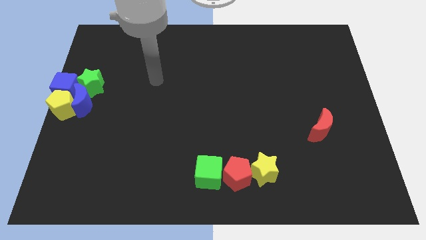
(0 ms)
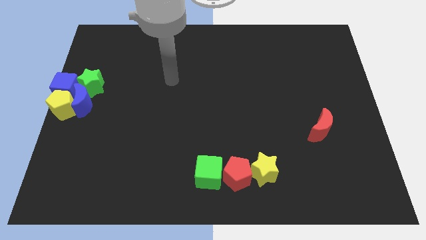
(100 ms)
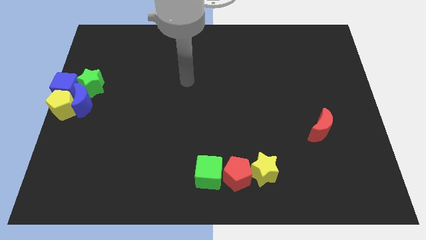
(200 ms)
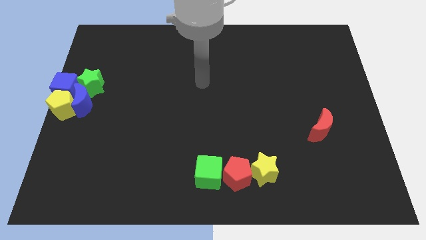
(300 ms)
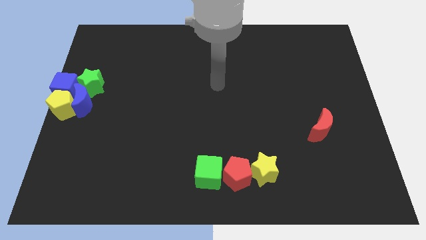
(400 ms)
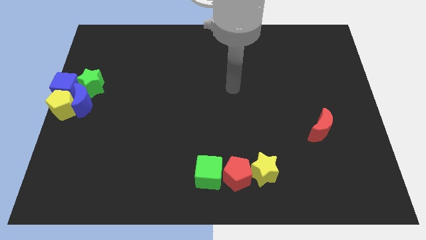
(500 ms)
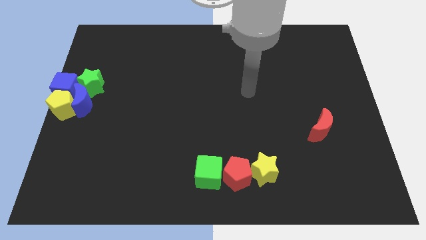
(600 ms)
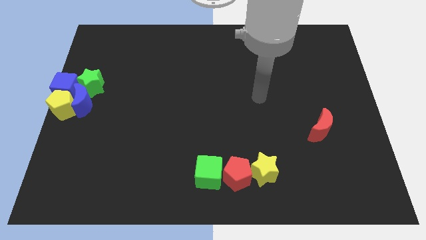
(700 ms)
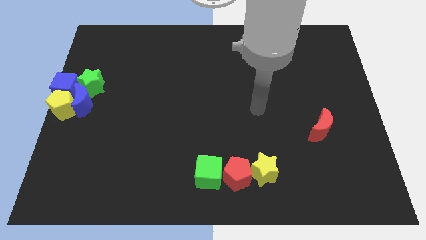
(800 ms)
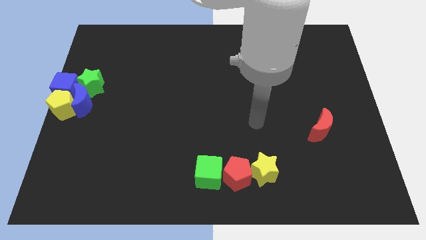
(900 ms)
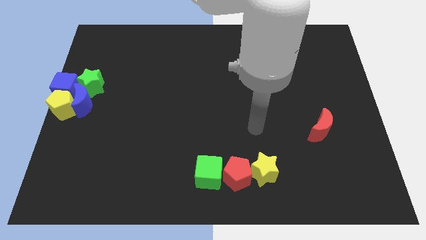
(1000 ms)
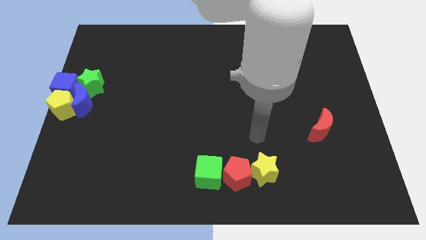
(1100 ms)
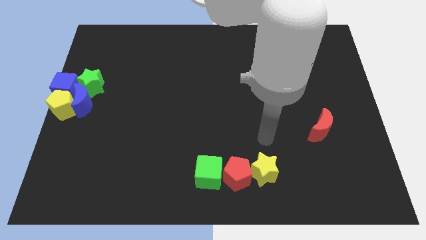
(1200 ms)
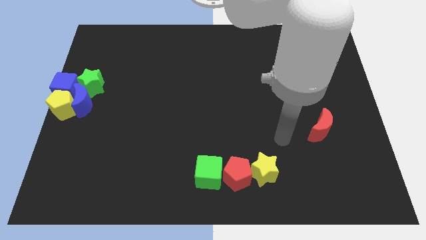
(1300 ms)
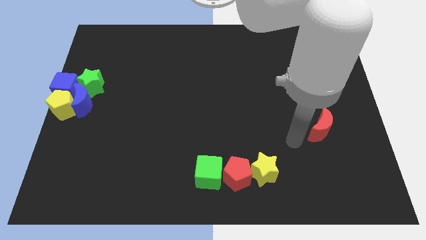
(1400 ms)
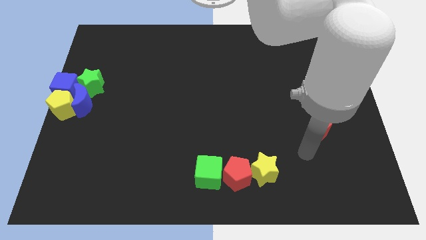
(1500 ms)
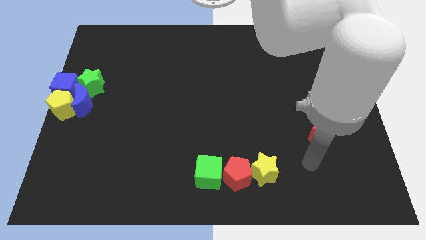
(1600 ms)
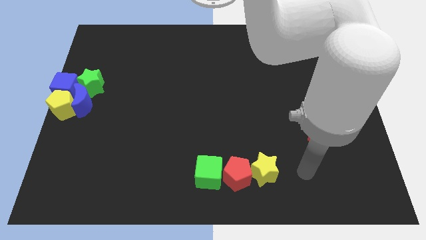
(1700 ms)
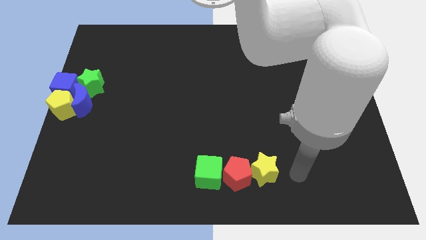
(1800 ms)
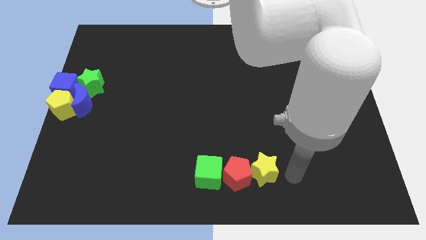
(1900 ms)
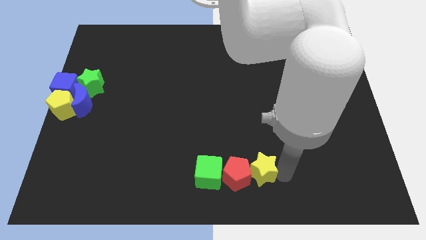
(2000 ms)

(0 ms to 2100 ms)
move your arm towards the yellow star

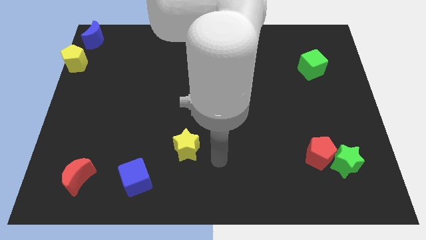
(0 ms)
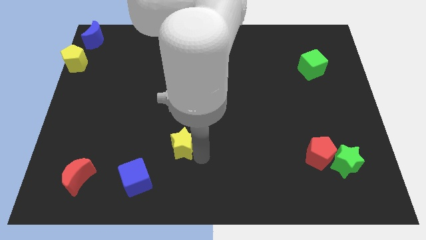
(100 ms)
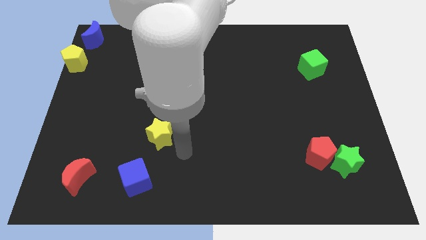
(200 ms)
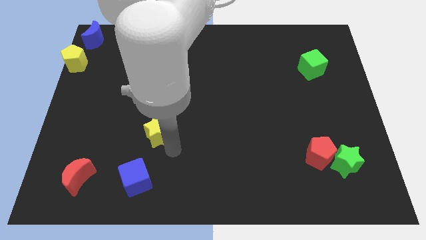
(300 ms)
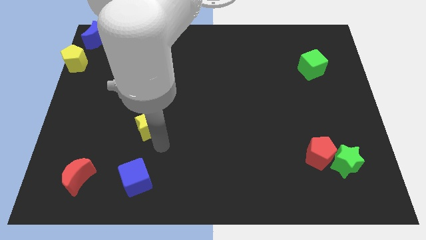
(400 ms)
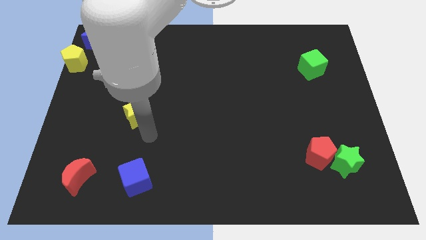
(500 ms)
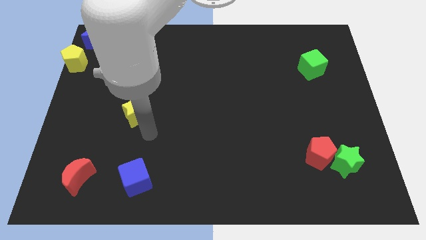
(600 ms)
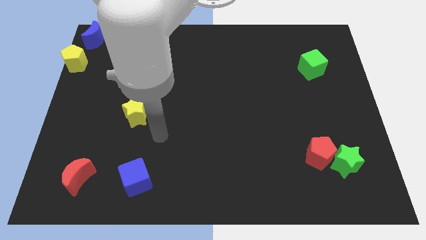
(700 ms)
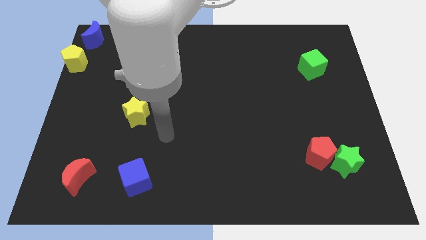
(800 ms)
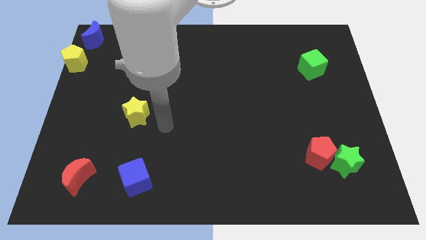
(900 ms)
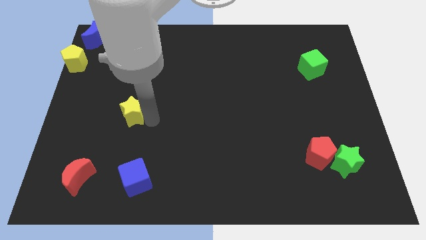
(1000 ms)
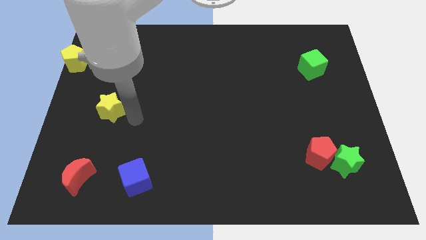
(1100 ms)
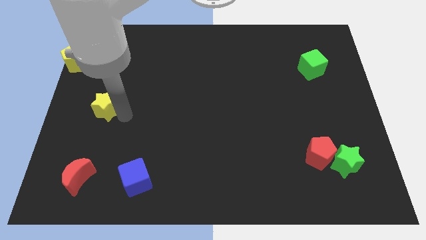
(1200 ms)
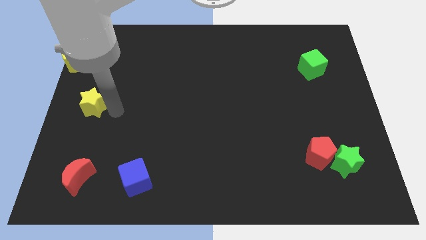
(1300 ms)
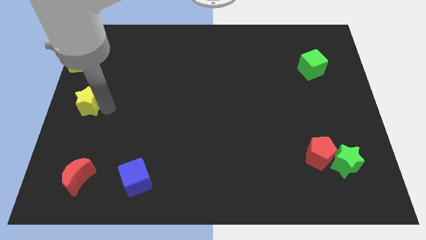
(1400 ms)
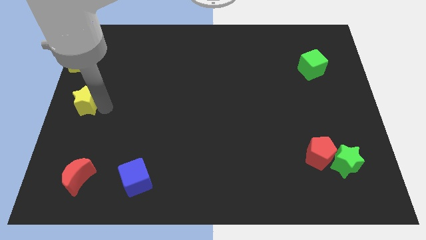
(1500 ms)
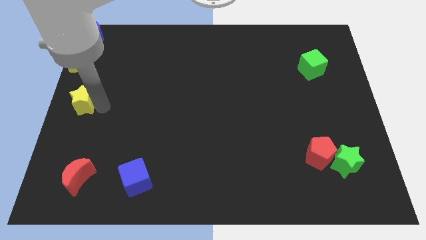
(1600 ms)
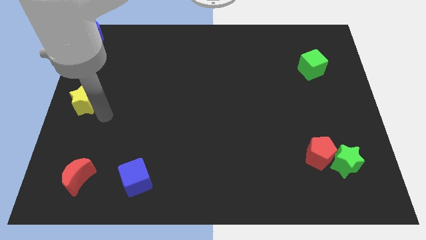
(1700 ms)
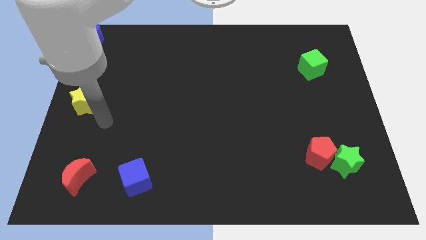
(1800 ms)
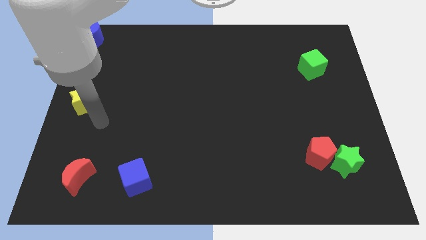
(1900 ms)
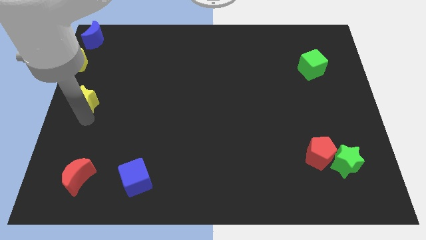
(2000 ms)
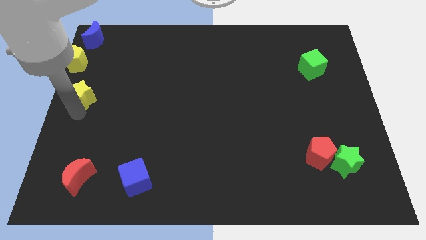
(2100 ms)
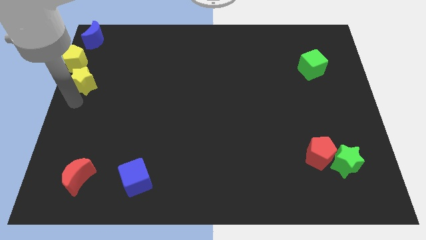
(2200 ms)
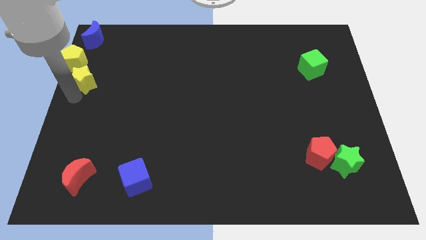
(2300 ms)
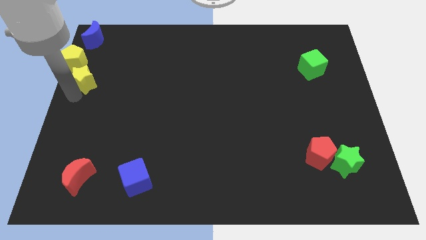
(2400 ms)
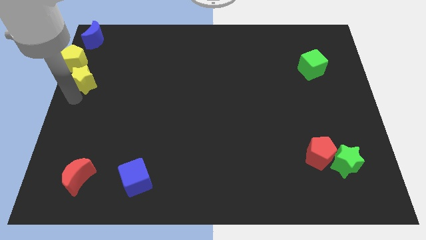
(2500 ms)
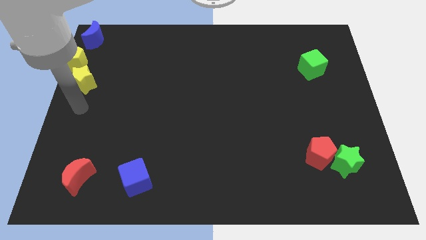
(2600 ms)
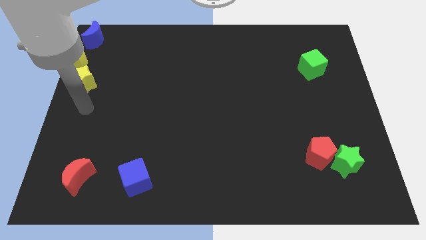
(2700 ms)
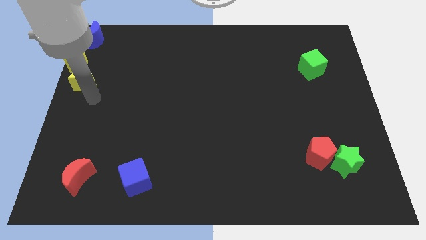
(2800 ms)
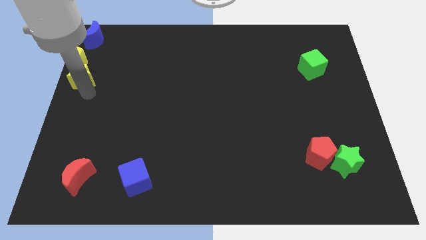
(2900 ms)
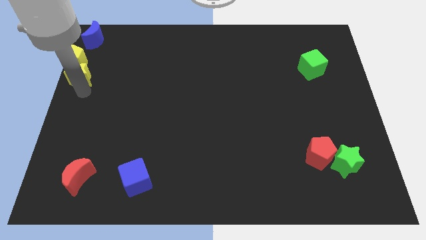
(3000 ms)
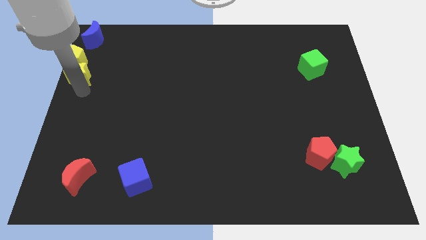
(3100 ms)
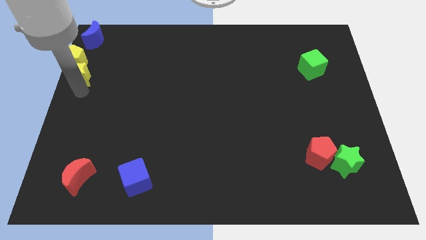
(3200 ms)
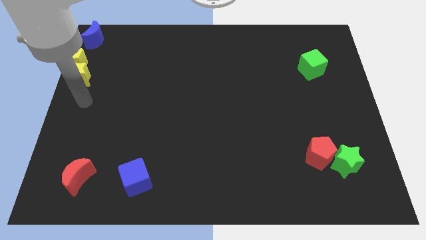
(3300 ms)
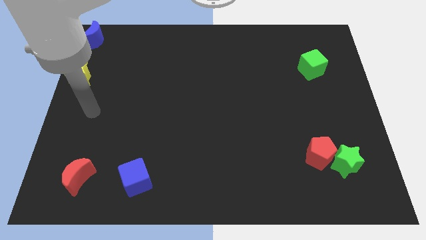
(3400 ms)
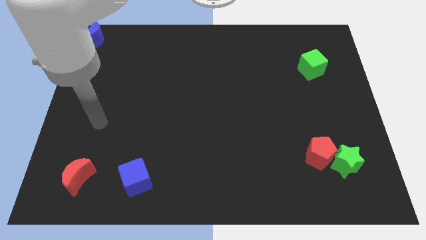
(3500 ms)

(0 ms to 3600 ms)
move yellow star into yellow pentagon

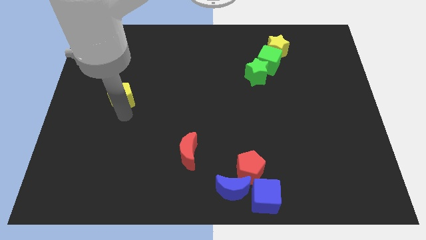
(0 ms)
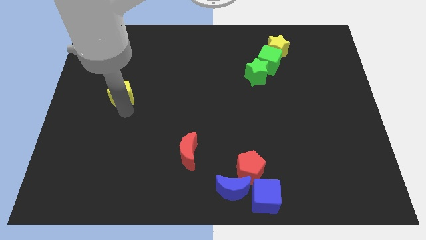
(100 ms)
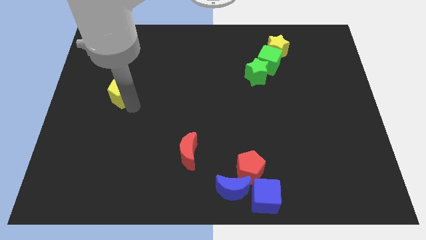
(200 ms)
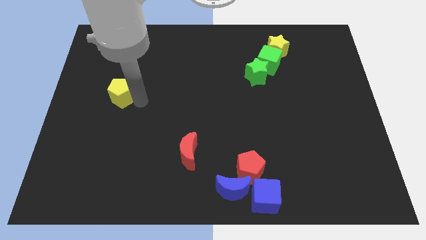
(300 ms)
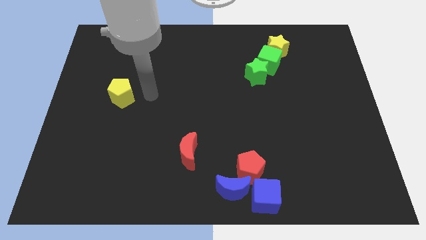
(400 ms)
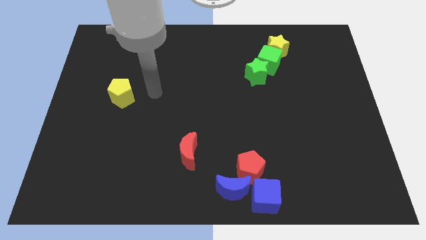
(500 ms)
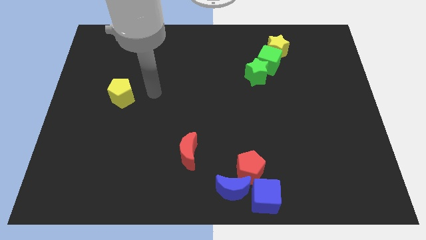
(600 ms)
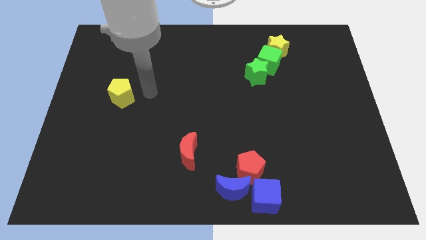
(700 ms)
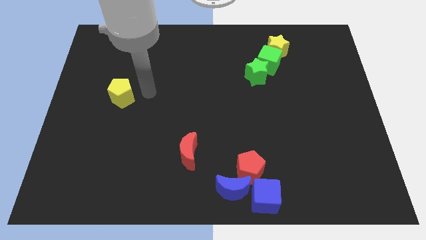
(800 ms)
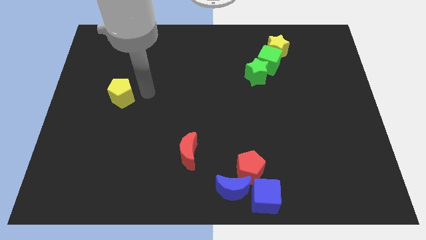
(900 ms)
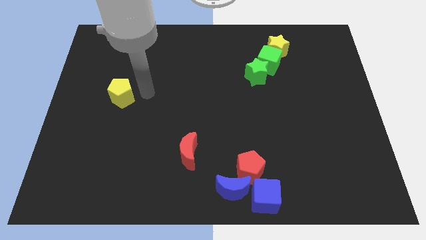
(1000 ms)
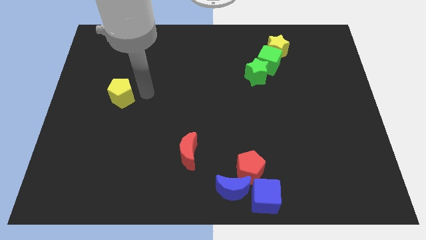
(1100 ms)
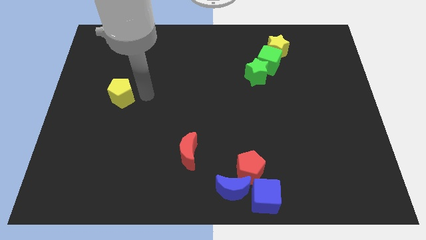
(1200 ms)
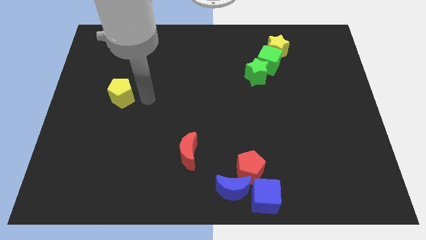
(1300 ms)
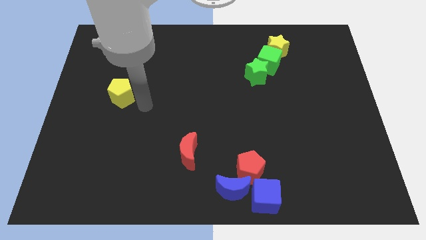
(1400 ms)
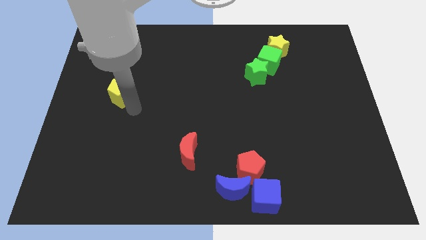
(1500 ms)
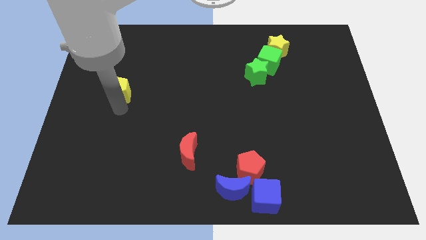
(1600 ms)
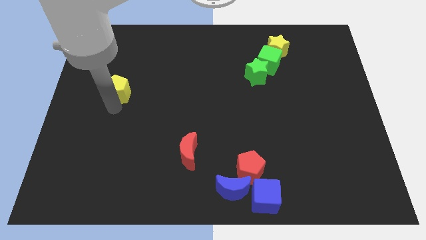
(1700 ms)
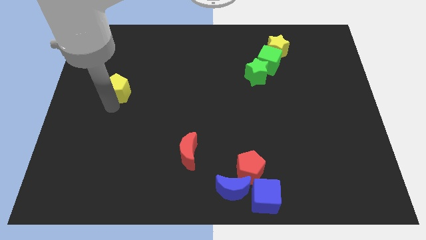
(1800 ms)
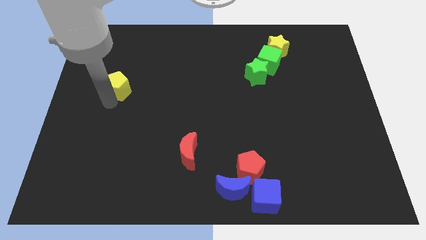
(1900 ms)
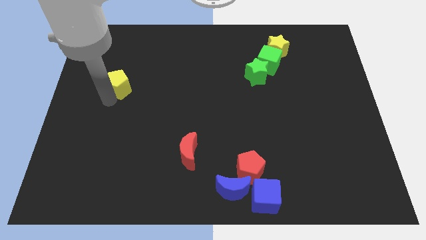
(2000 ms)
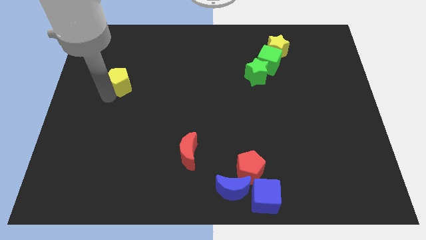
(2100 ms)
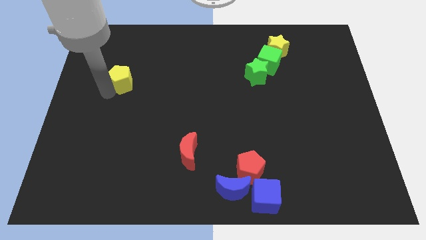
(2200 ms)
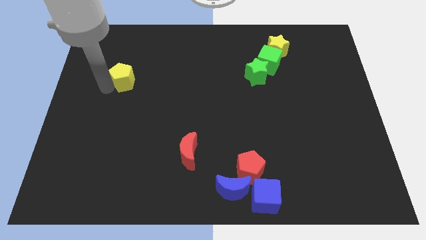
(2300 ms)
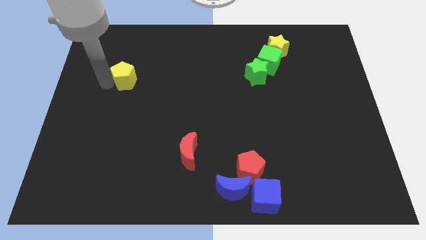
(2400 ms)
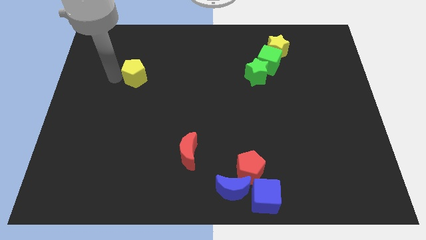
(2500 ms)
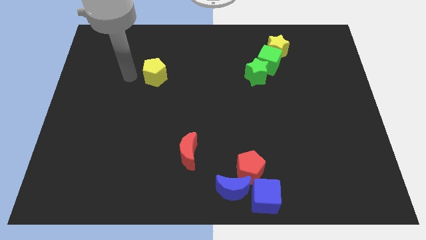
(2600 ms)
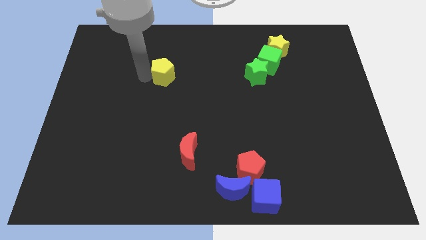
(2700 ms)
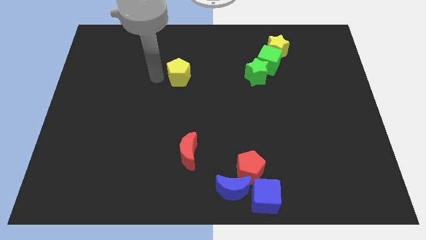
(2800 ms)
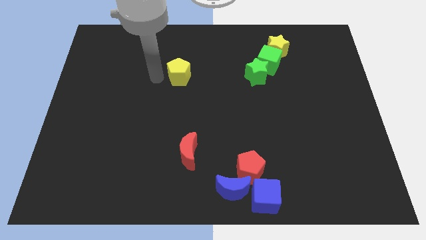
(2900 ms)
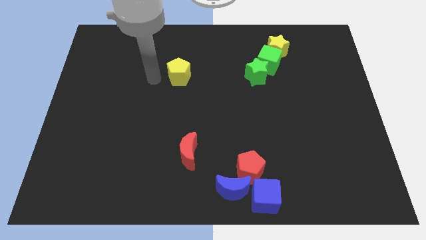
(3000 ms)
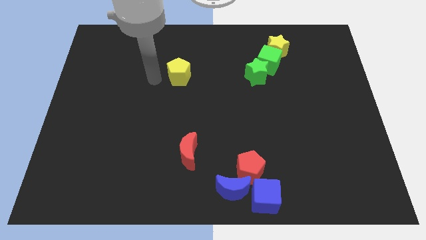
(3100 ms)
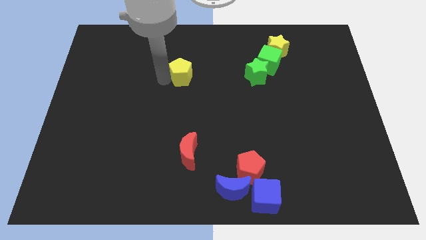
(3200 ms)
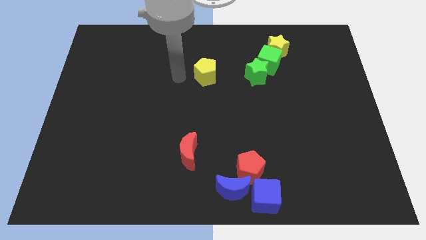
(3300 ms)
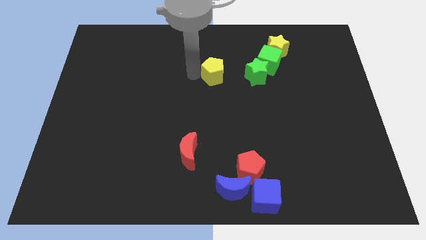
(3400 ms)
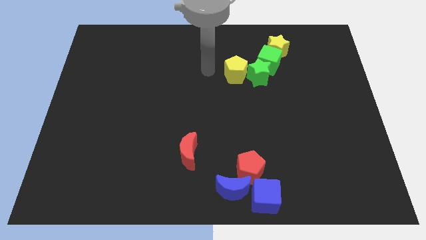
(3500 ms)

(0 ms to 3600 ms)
push the yellow pentagon to the left side of the green star
